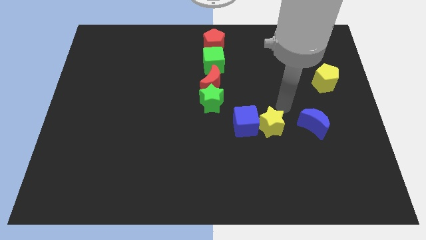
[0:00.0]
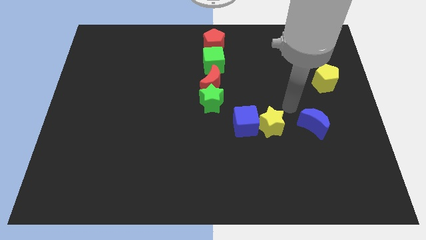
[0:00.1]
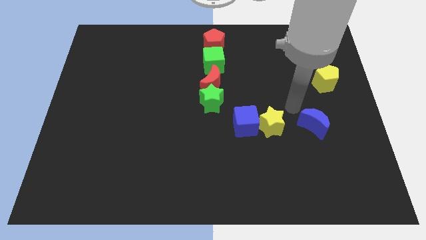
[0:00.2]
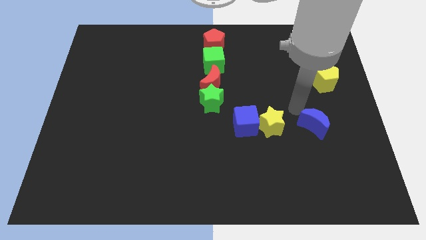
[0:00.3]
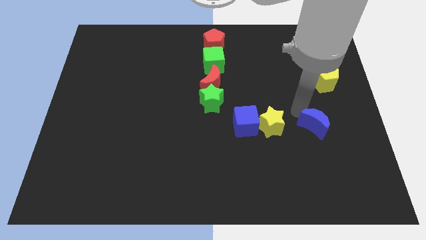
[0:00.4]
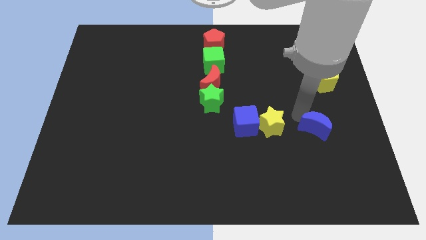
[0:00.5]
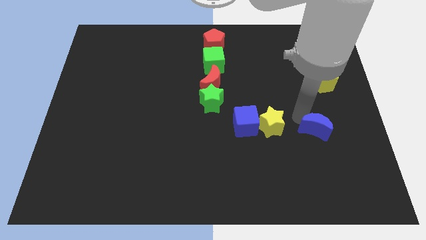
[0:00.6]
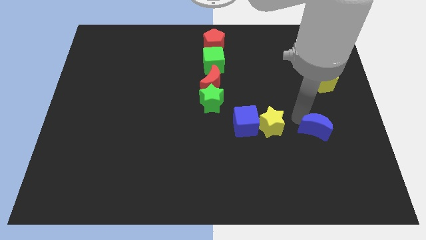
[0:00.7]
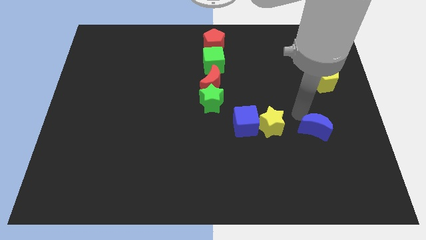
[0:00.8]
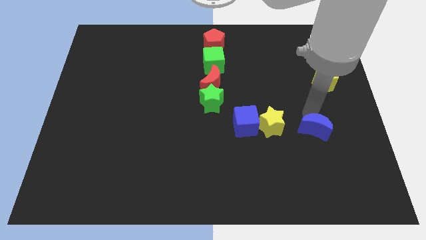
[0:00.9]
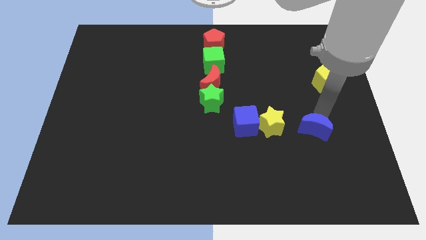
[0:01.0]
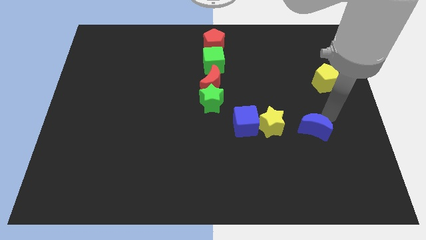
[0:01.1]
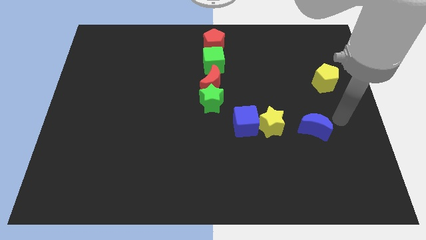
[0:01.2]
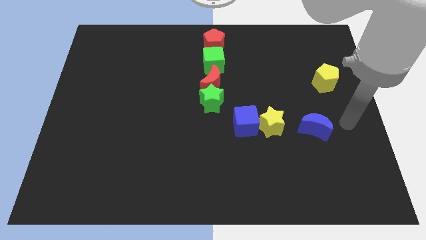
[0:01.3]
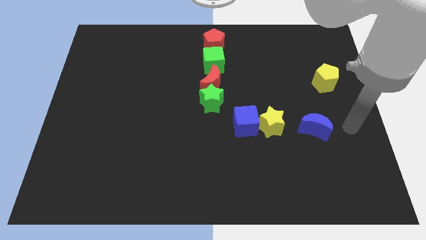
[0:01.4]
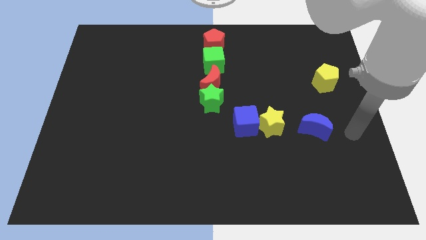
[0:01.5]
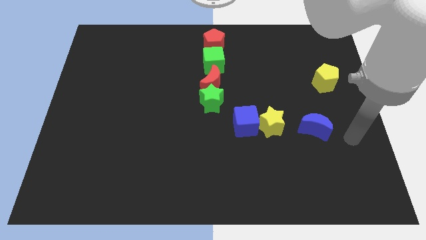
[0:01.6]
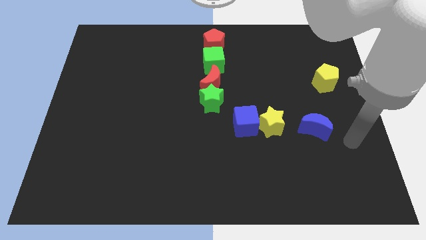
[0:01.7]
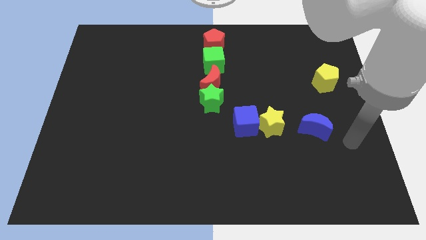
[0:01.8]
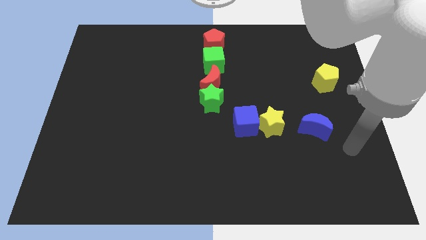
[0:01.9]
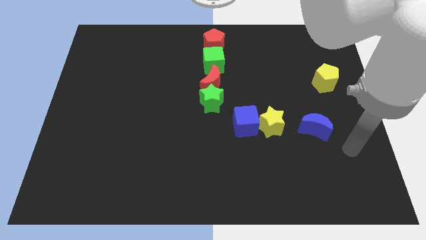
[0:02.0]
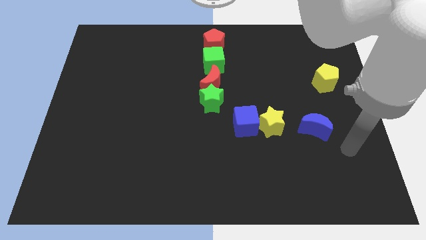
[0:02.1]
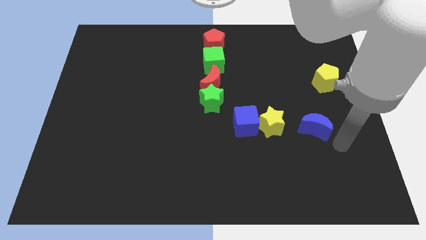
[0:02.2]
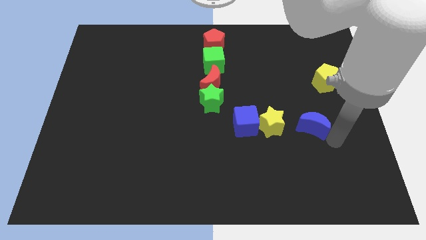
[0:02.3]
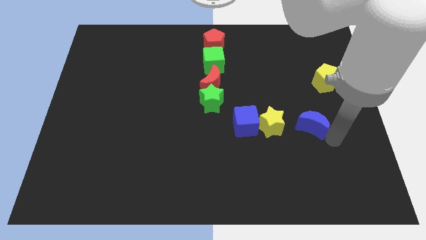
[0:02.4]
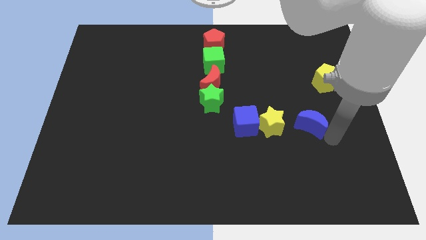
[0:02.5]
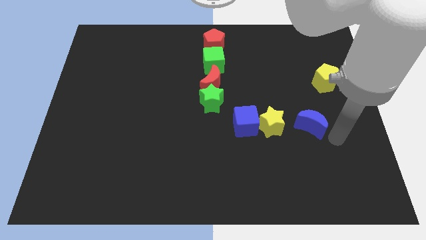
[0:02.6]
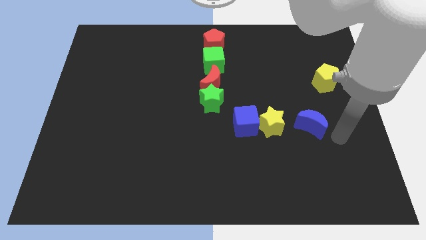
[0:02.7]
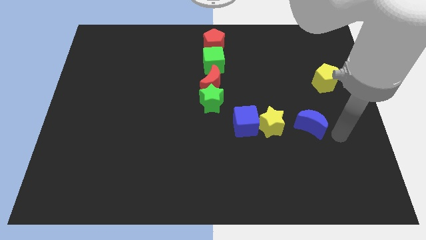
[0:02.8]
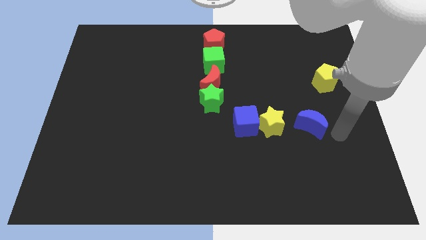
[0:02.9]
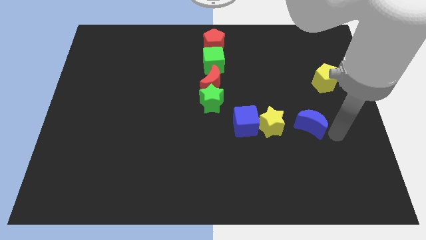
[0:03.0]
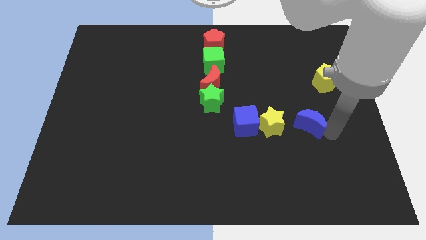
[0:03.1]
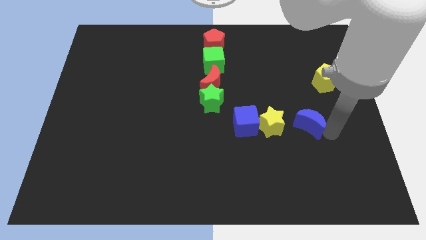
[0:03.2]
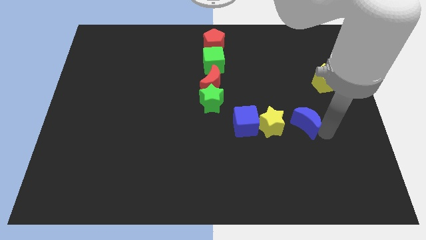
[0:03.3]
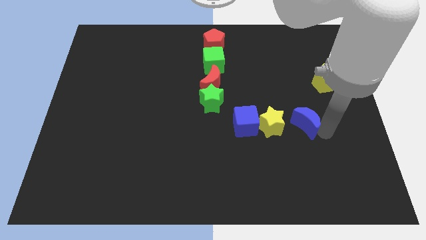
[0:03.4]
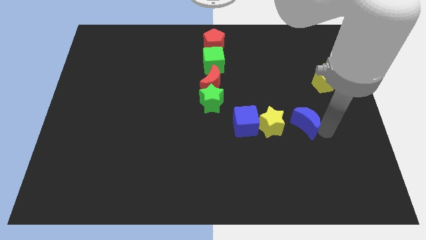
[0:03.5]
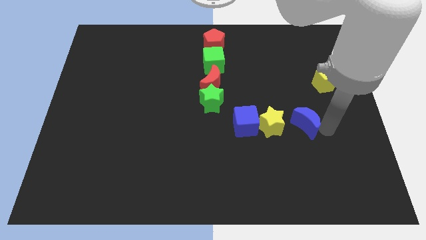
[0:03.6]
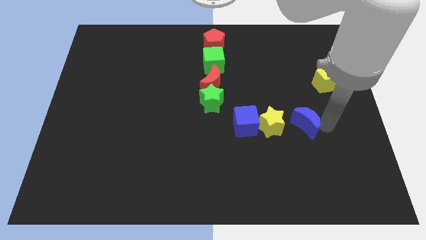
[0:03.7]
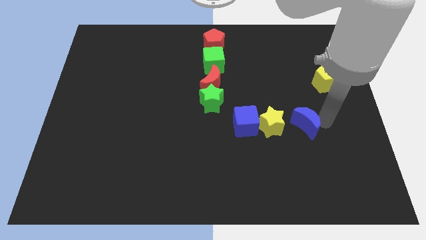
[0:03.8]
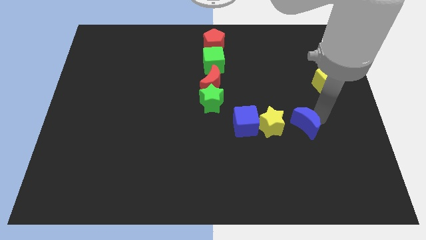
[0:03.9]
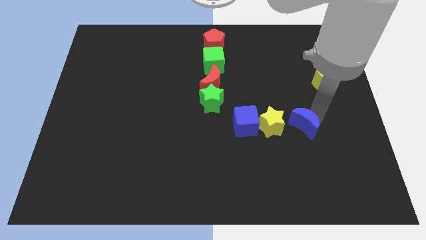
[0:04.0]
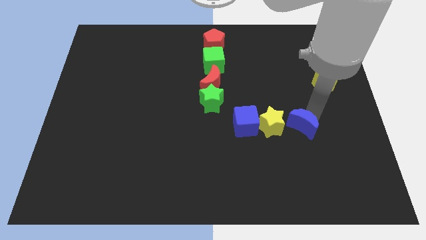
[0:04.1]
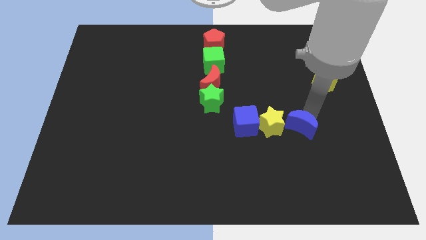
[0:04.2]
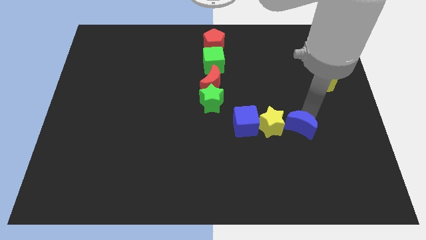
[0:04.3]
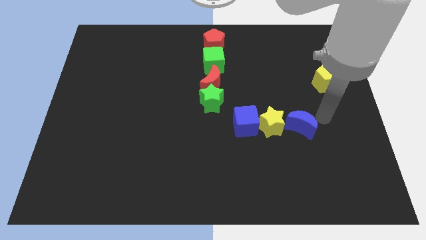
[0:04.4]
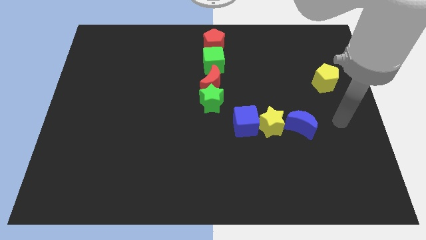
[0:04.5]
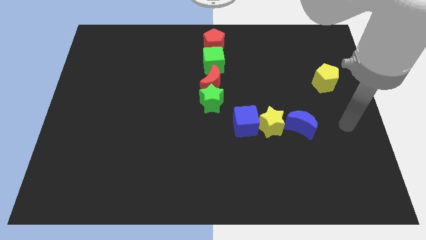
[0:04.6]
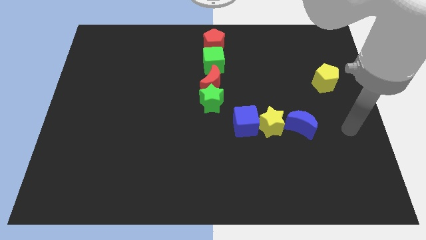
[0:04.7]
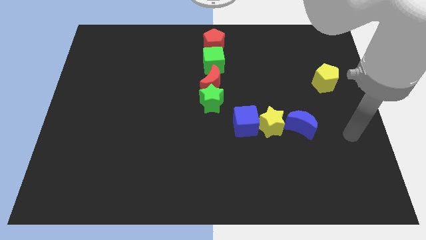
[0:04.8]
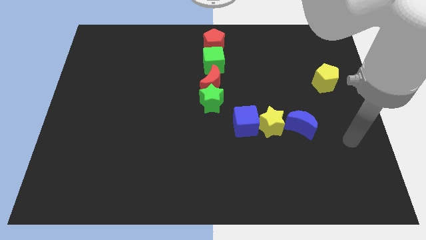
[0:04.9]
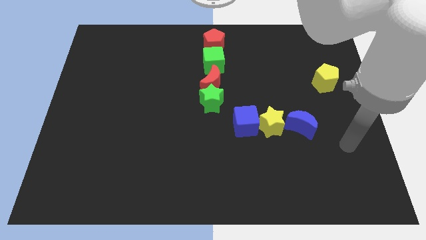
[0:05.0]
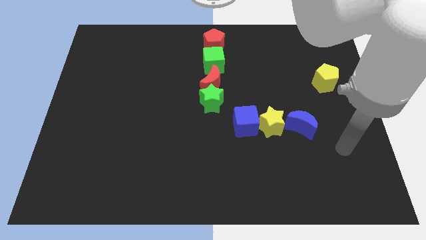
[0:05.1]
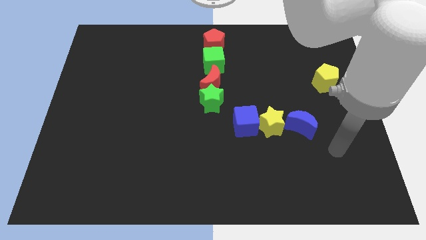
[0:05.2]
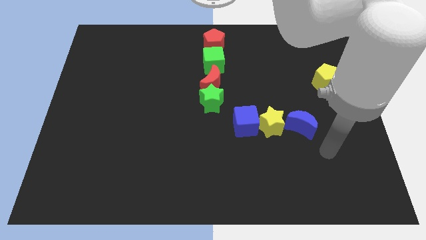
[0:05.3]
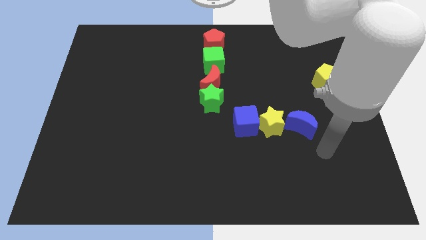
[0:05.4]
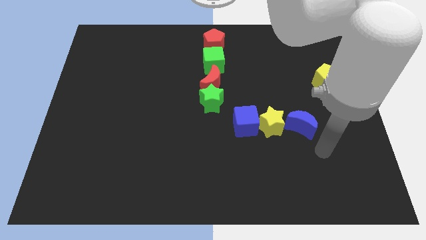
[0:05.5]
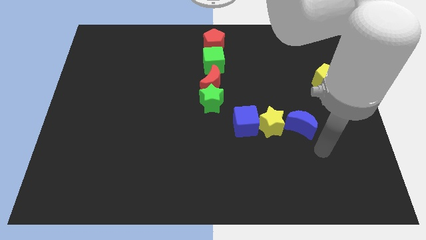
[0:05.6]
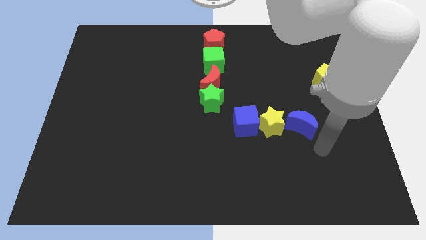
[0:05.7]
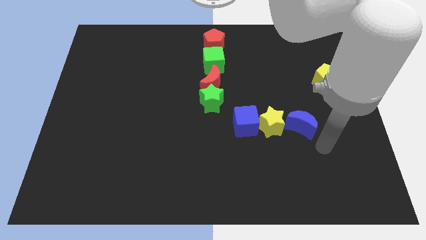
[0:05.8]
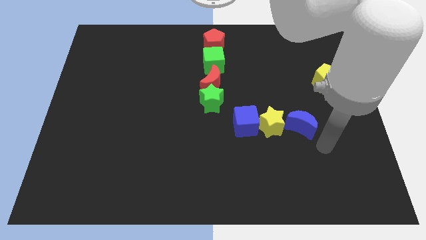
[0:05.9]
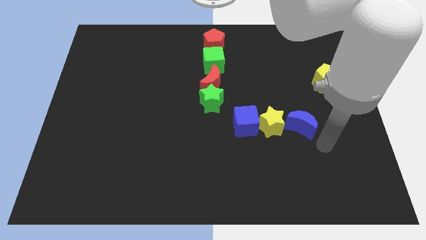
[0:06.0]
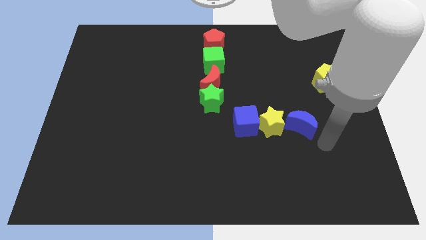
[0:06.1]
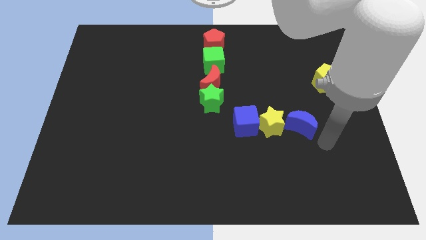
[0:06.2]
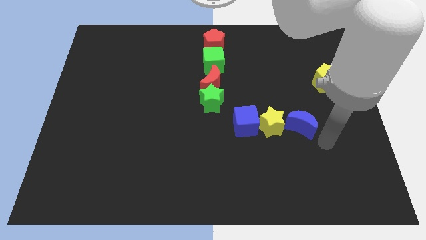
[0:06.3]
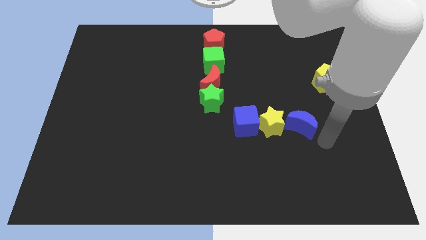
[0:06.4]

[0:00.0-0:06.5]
push the blue crescent to the right of the yellow star
